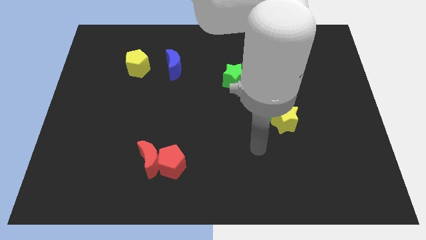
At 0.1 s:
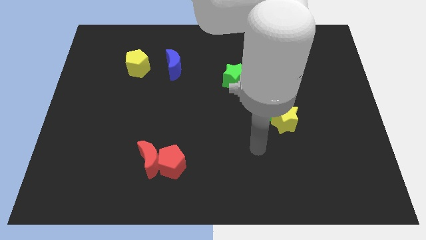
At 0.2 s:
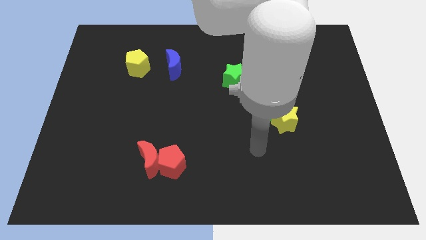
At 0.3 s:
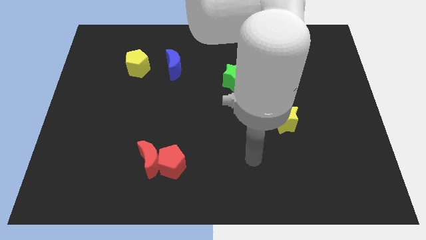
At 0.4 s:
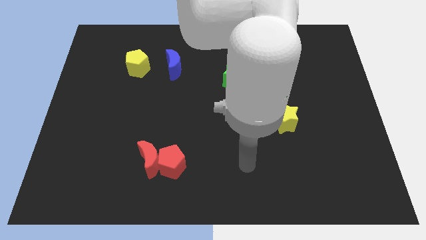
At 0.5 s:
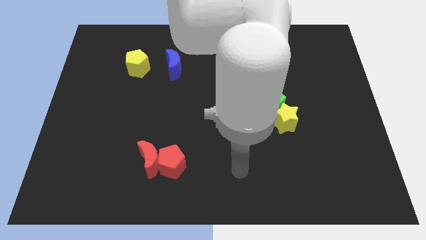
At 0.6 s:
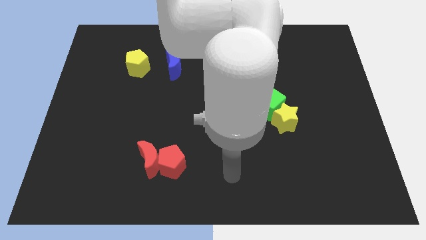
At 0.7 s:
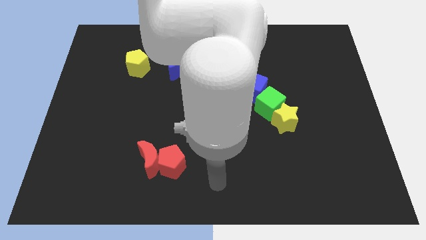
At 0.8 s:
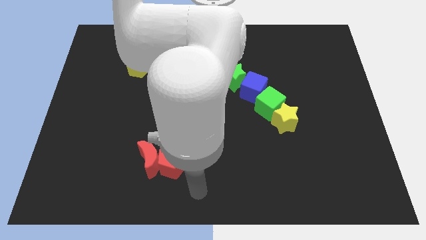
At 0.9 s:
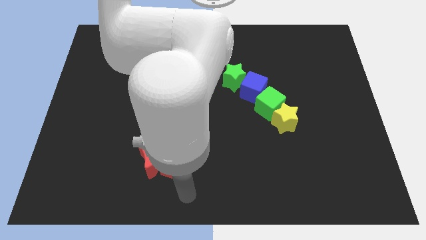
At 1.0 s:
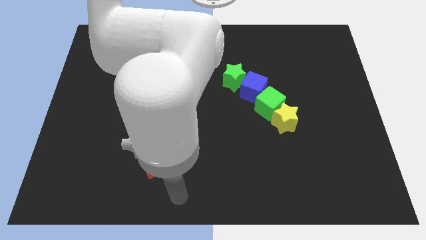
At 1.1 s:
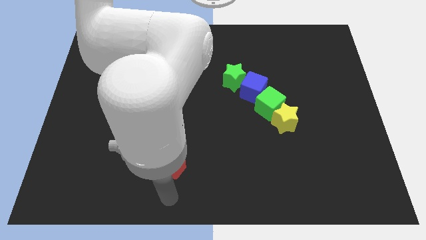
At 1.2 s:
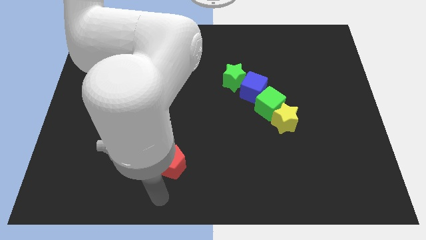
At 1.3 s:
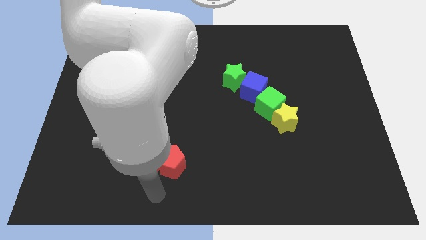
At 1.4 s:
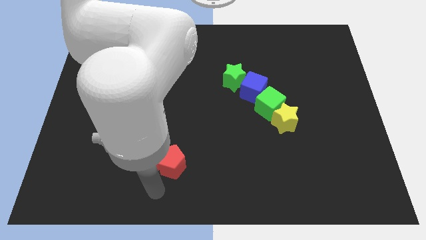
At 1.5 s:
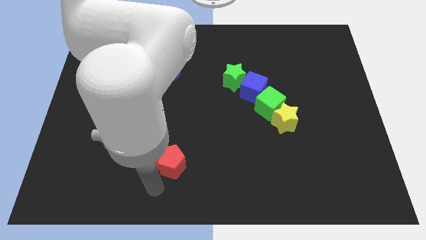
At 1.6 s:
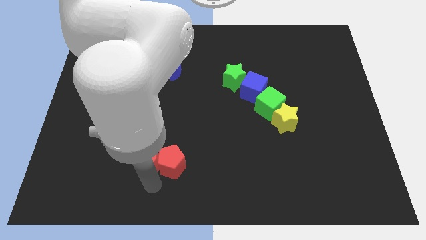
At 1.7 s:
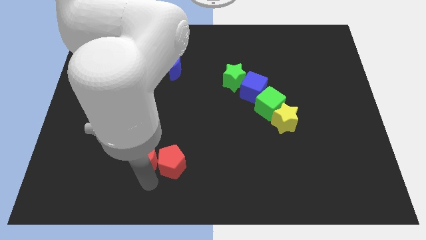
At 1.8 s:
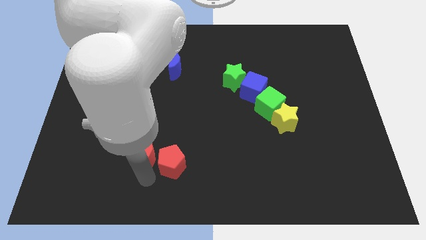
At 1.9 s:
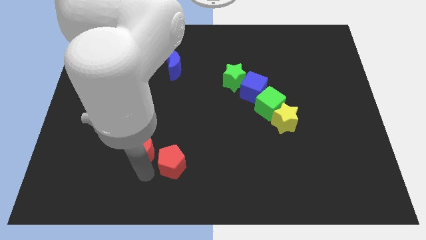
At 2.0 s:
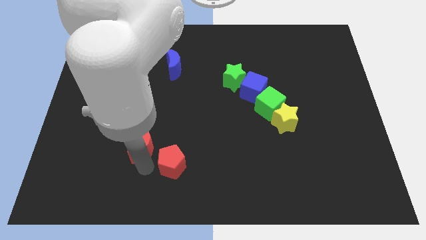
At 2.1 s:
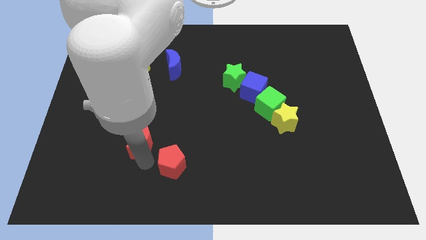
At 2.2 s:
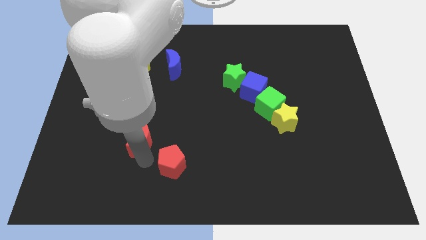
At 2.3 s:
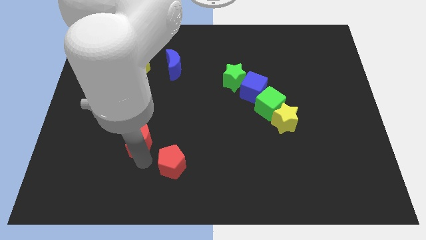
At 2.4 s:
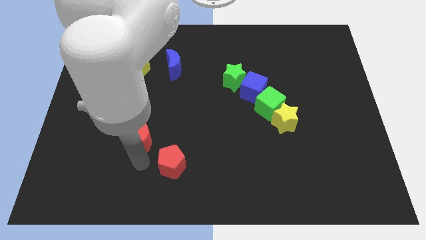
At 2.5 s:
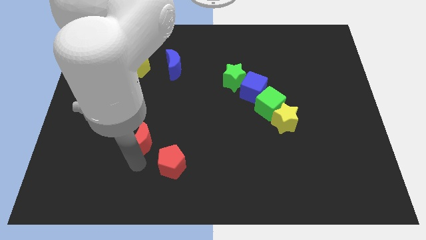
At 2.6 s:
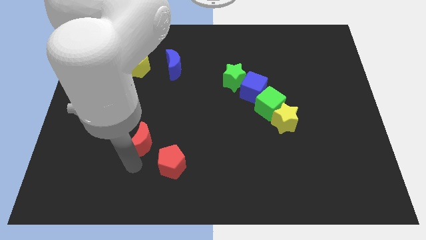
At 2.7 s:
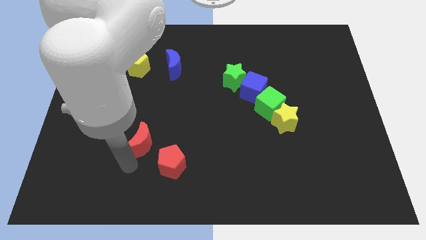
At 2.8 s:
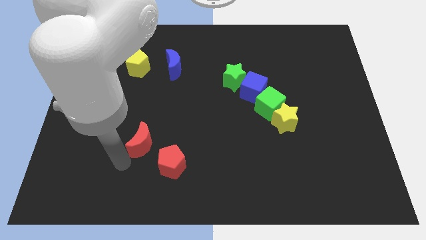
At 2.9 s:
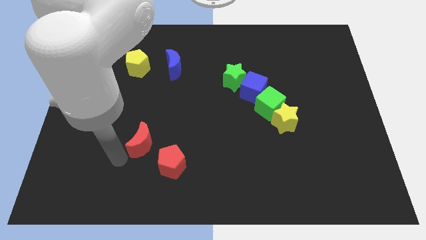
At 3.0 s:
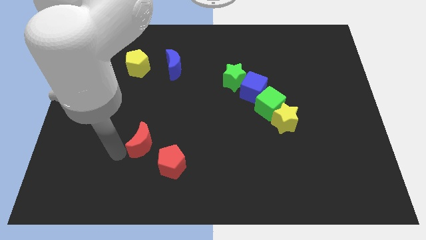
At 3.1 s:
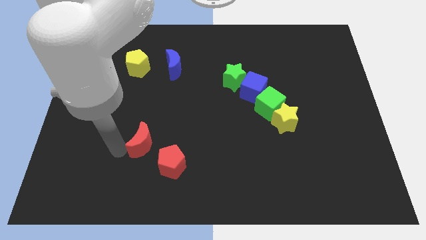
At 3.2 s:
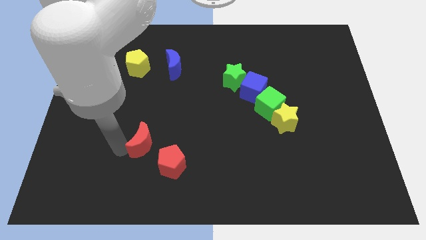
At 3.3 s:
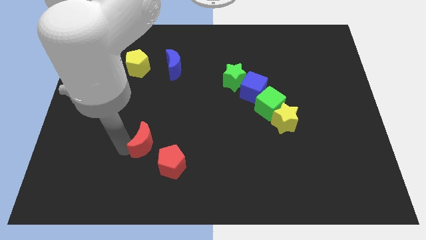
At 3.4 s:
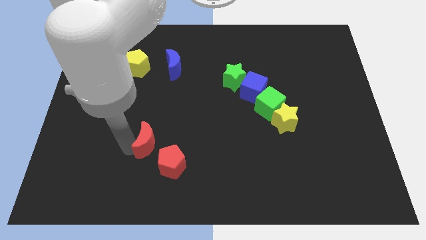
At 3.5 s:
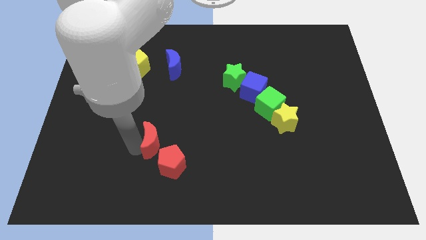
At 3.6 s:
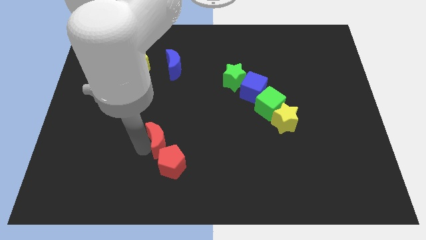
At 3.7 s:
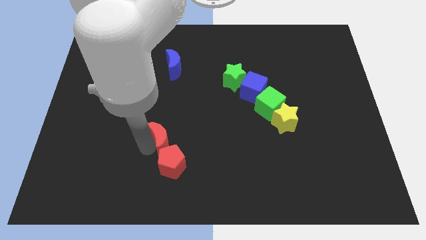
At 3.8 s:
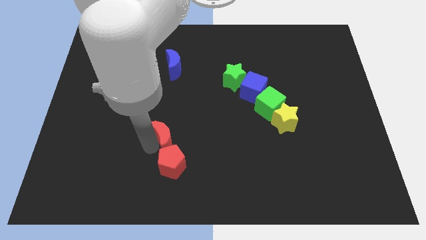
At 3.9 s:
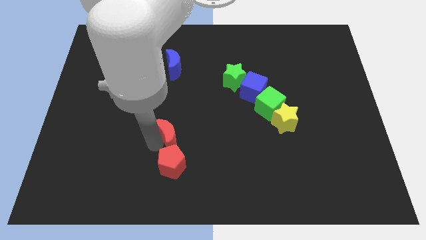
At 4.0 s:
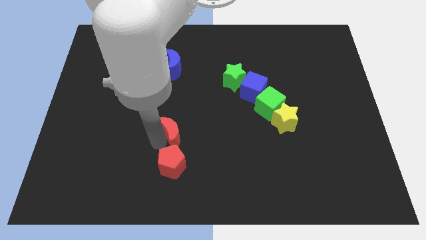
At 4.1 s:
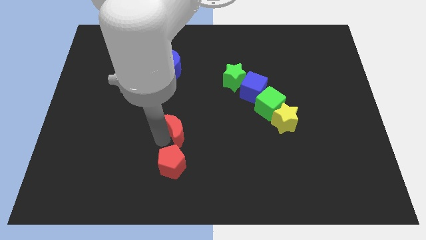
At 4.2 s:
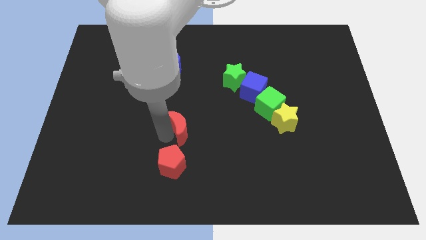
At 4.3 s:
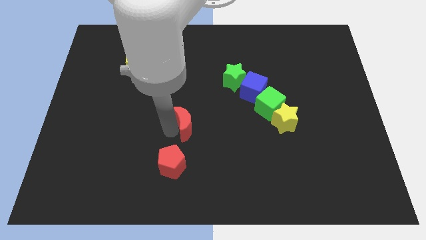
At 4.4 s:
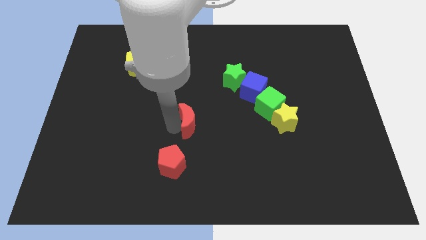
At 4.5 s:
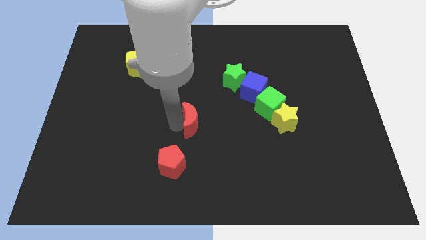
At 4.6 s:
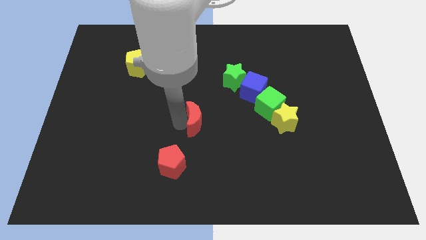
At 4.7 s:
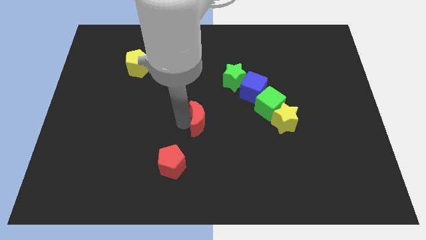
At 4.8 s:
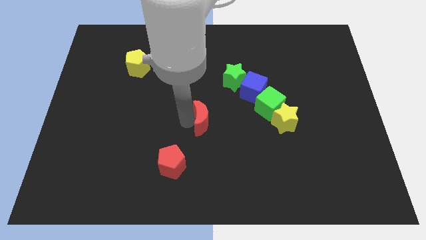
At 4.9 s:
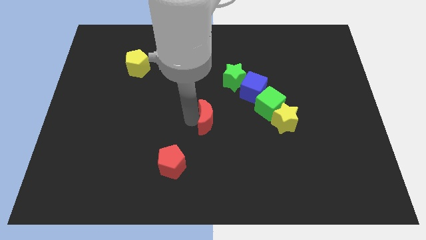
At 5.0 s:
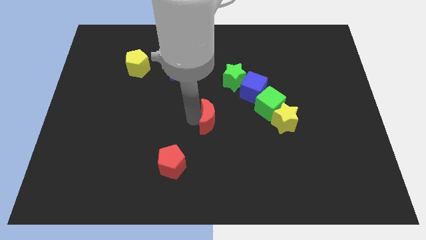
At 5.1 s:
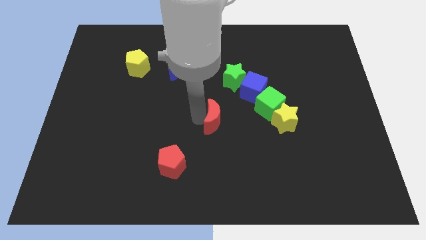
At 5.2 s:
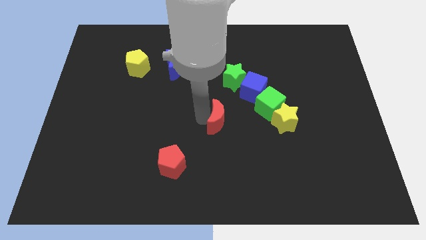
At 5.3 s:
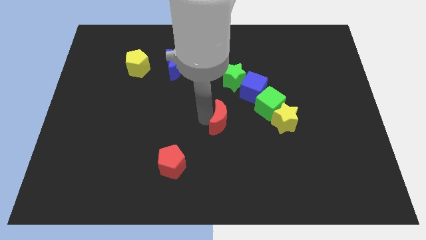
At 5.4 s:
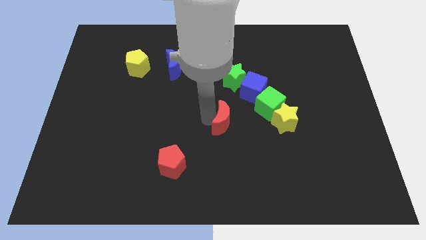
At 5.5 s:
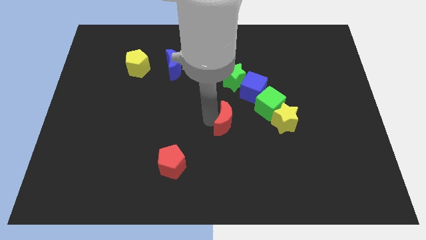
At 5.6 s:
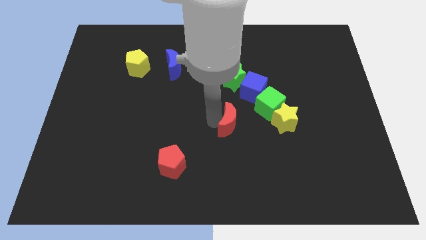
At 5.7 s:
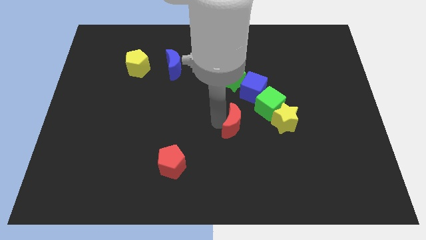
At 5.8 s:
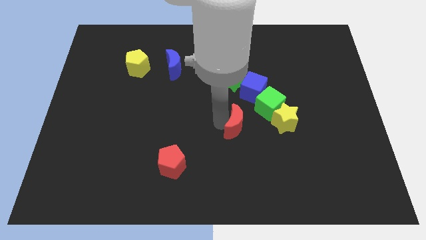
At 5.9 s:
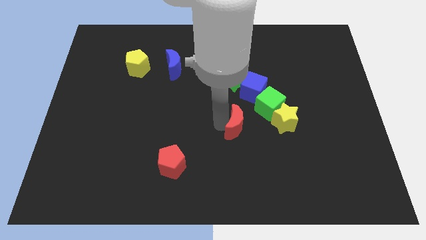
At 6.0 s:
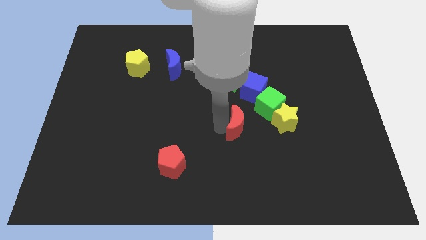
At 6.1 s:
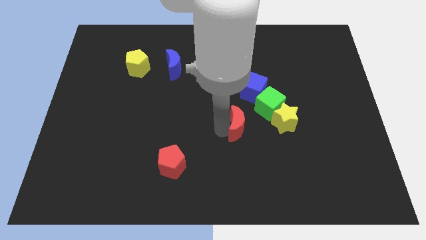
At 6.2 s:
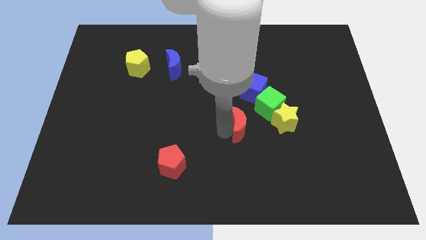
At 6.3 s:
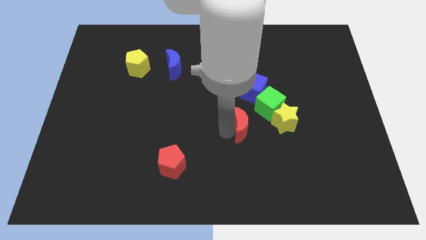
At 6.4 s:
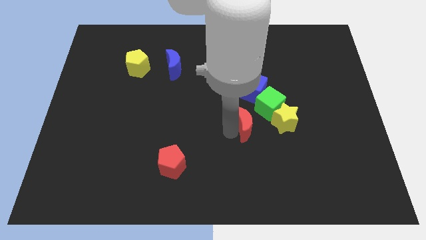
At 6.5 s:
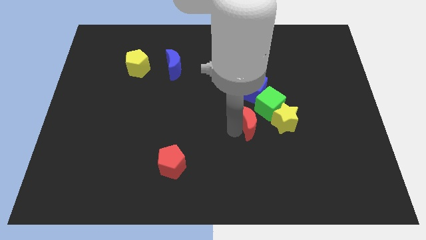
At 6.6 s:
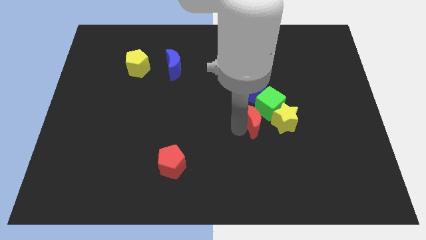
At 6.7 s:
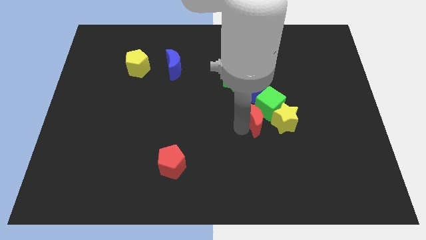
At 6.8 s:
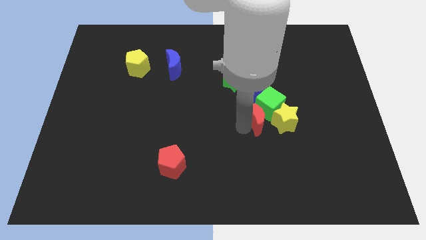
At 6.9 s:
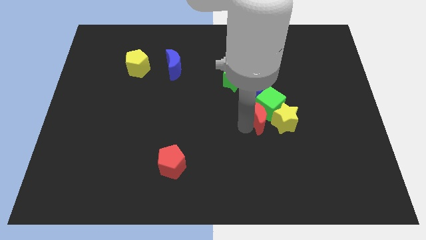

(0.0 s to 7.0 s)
move the red moon towards the green cube

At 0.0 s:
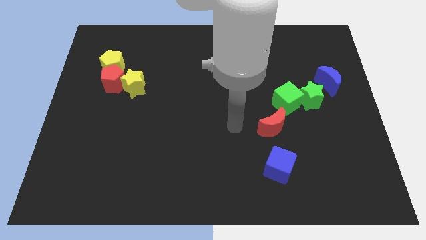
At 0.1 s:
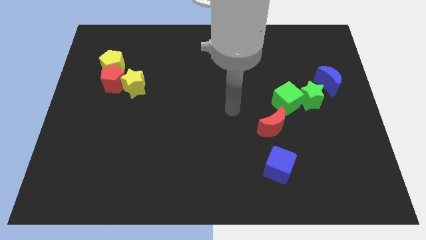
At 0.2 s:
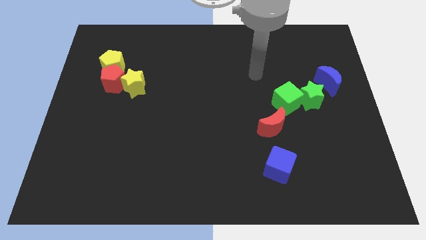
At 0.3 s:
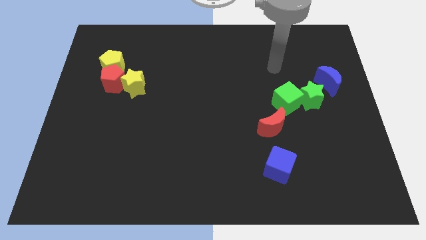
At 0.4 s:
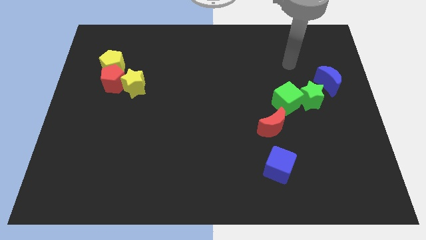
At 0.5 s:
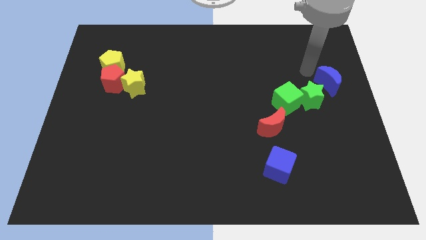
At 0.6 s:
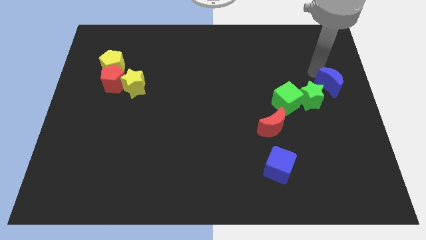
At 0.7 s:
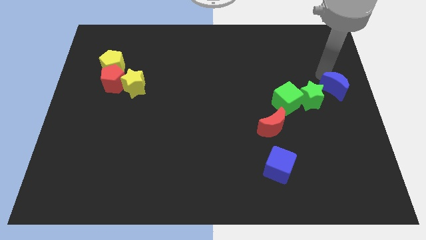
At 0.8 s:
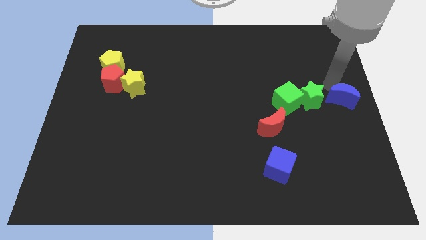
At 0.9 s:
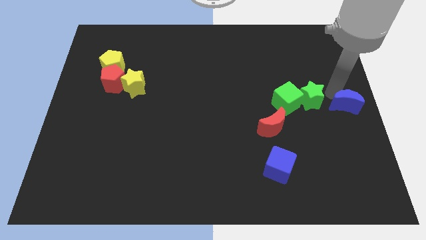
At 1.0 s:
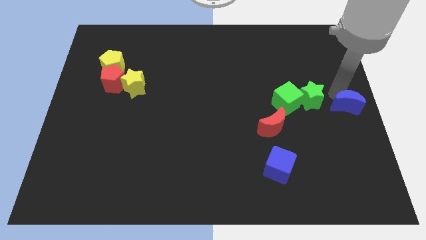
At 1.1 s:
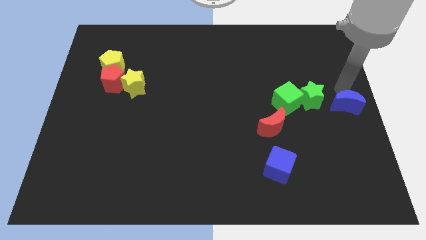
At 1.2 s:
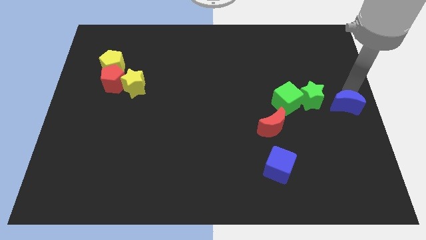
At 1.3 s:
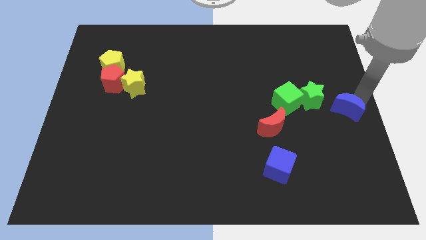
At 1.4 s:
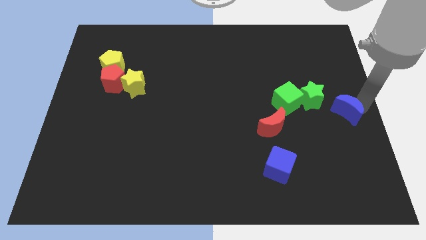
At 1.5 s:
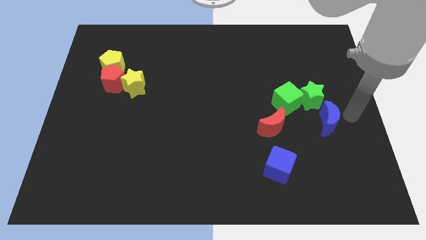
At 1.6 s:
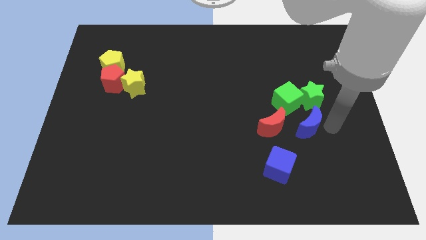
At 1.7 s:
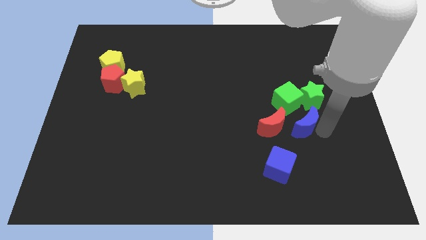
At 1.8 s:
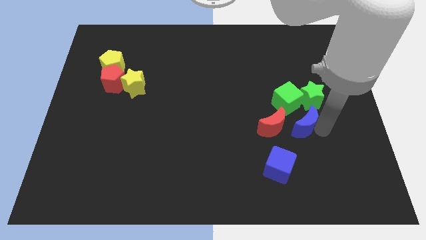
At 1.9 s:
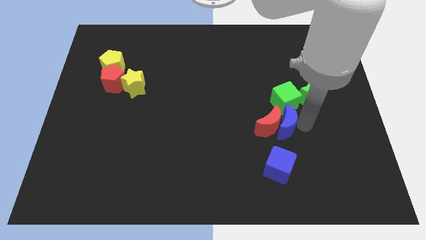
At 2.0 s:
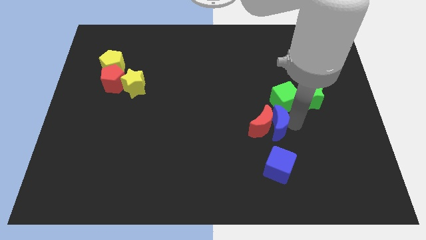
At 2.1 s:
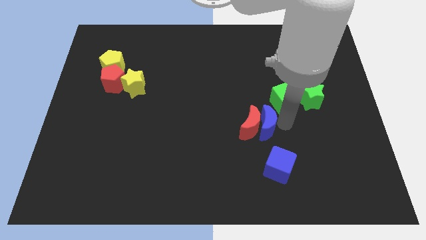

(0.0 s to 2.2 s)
put the blue moon next to the red moon
